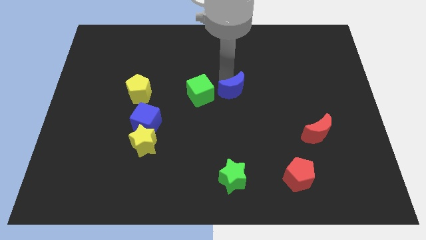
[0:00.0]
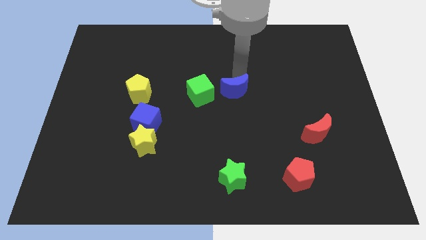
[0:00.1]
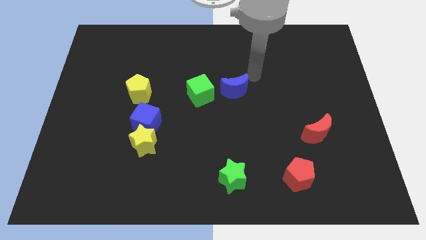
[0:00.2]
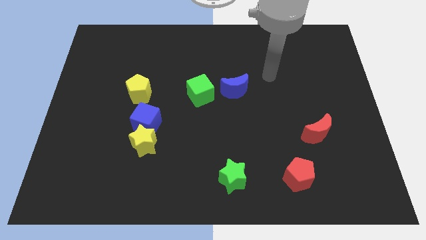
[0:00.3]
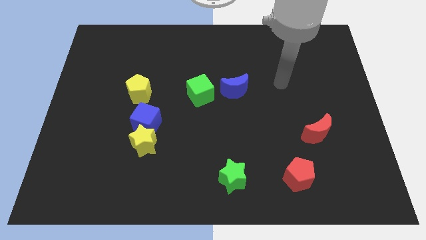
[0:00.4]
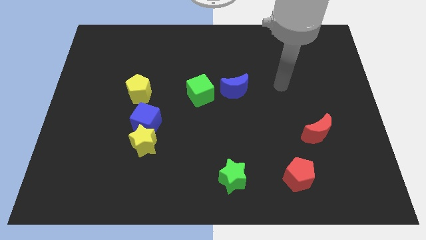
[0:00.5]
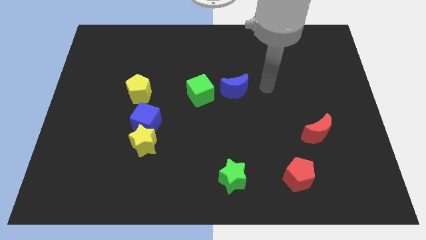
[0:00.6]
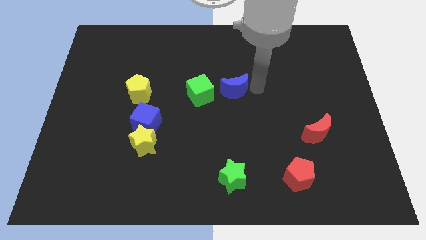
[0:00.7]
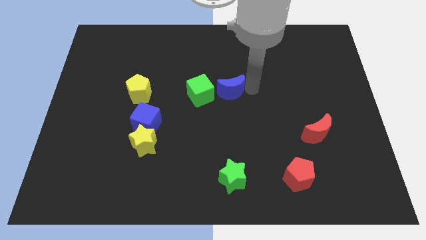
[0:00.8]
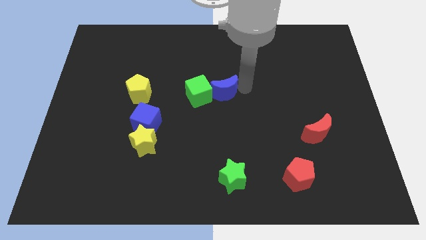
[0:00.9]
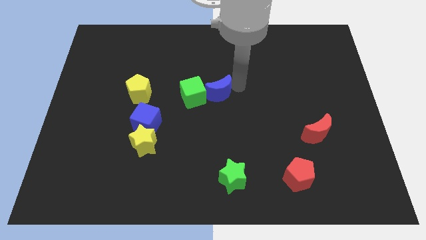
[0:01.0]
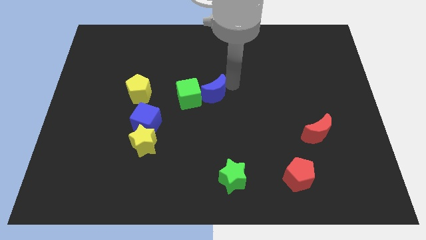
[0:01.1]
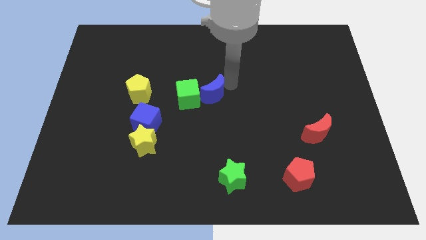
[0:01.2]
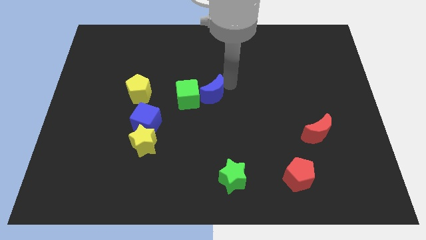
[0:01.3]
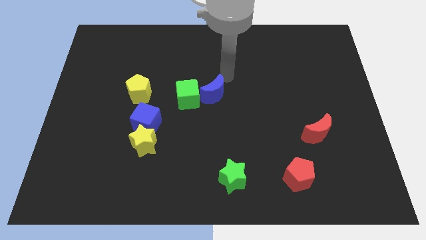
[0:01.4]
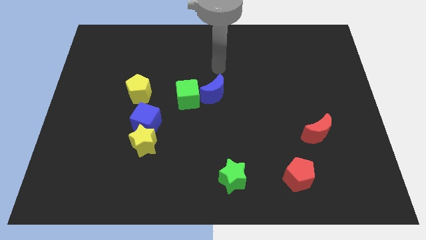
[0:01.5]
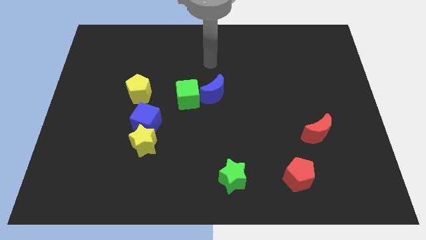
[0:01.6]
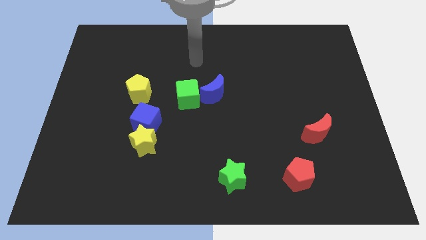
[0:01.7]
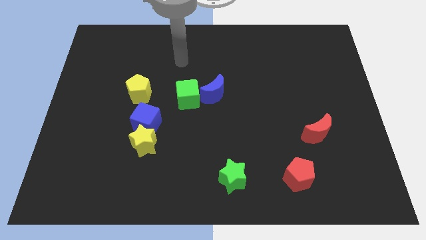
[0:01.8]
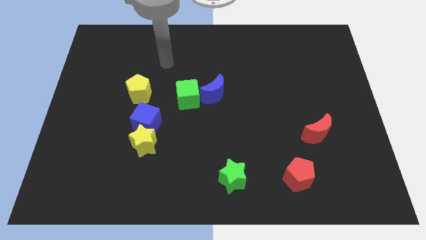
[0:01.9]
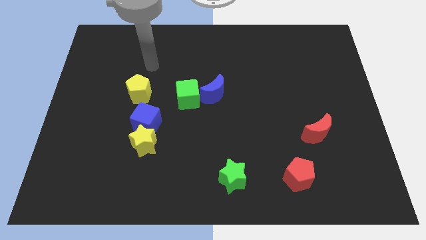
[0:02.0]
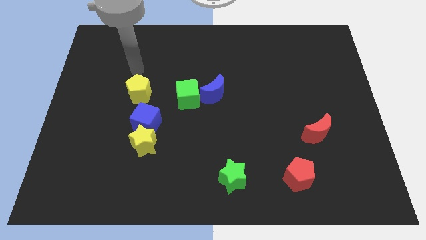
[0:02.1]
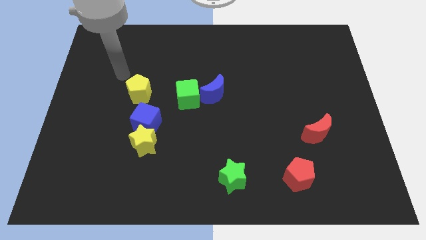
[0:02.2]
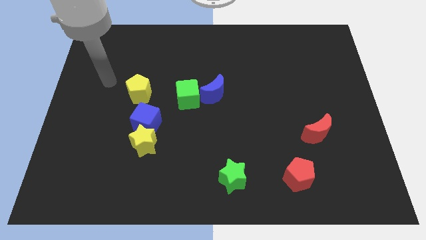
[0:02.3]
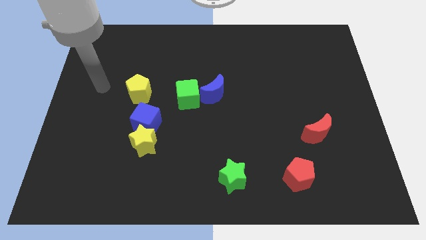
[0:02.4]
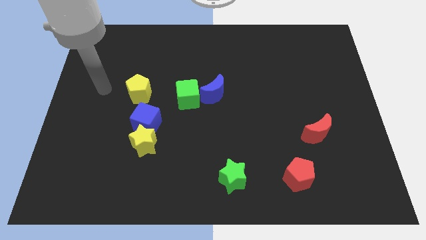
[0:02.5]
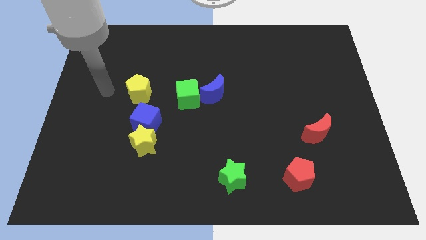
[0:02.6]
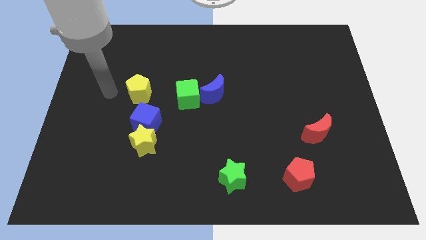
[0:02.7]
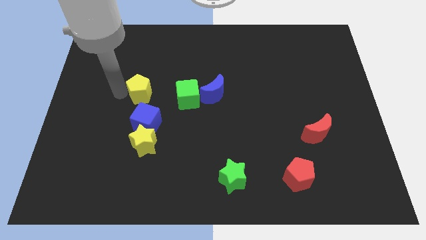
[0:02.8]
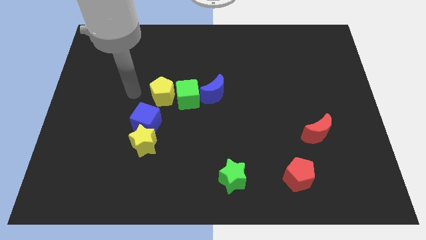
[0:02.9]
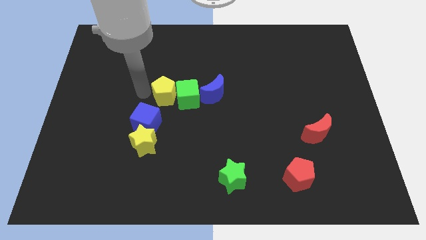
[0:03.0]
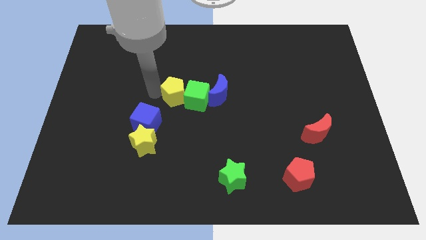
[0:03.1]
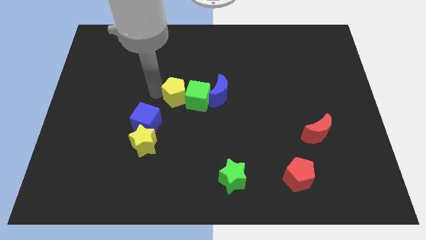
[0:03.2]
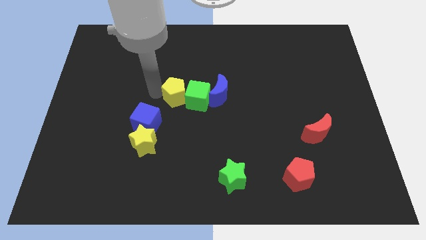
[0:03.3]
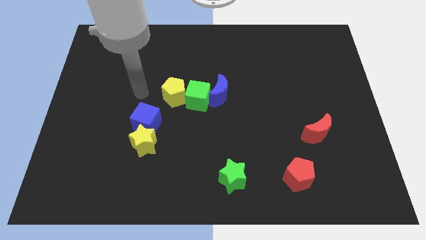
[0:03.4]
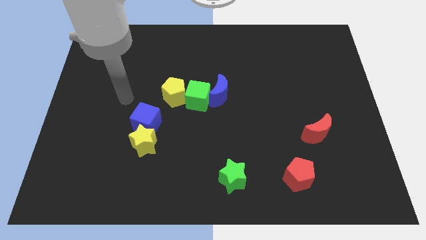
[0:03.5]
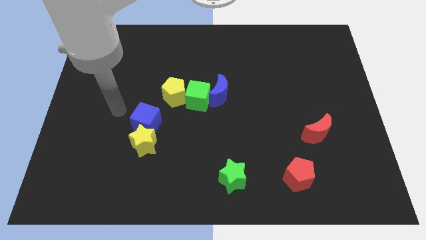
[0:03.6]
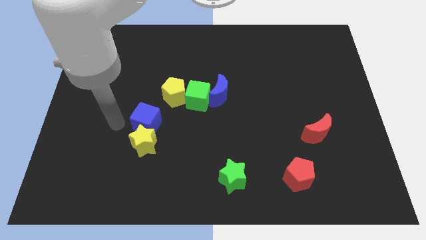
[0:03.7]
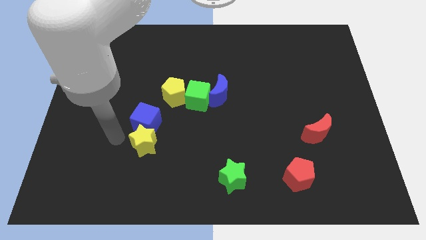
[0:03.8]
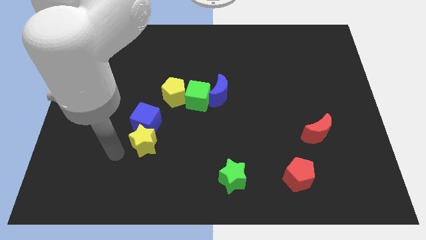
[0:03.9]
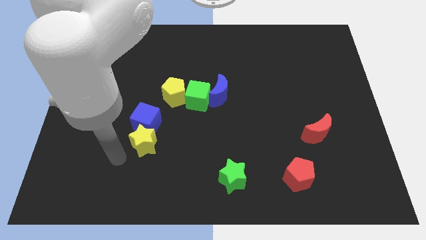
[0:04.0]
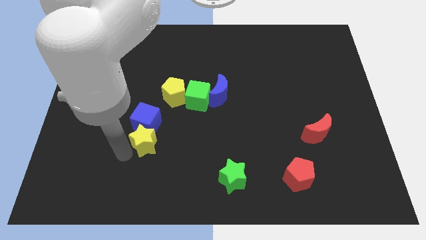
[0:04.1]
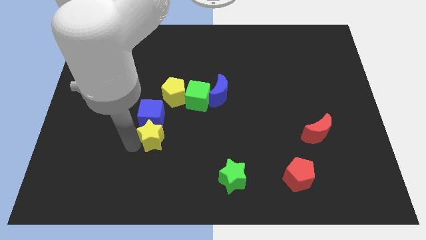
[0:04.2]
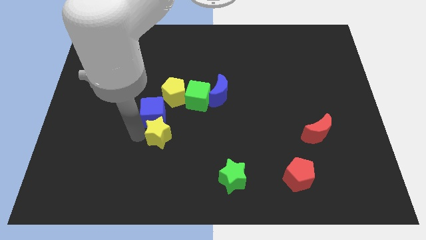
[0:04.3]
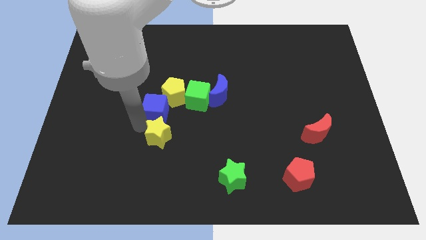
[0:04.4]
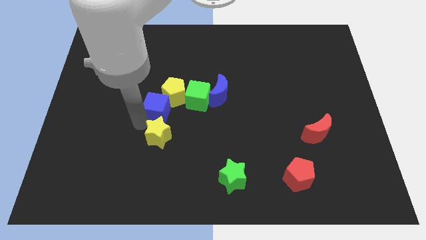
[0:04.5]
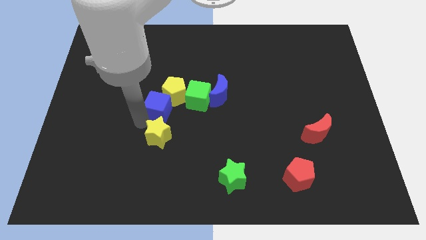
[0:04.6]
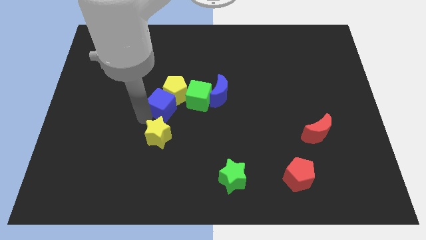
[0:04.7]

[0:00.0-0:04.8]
make a semicircle out of group of blocks

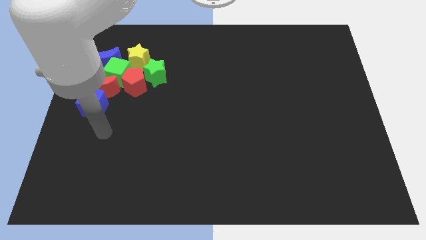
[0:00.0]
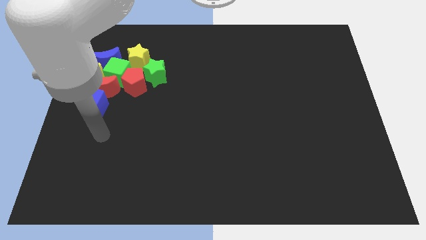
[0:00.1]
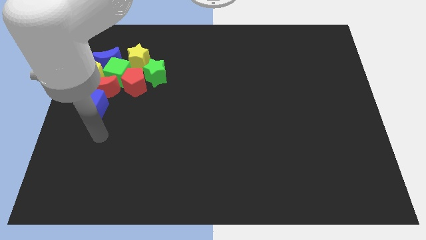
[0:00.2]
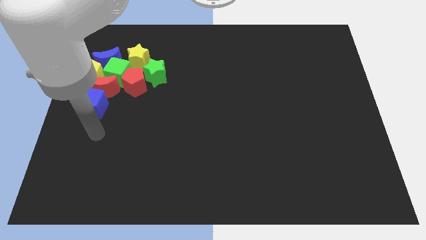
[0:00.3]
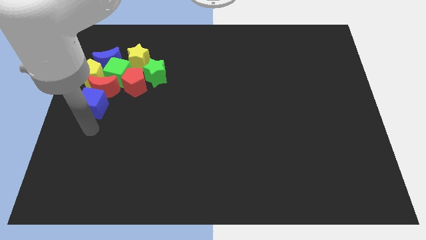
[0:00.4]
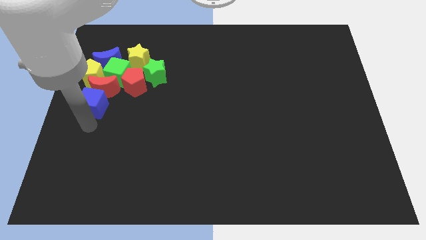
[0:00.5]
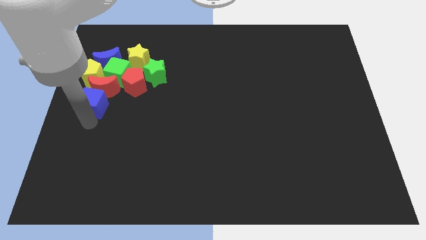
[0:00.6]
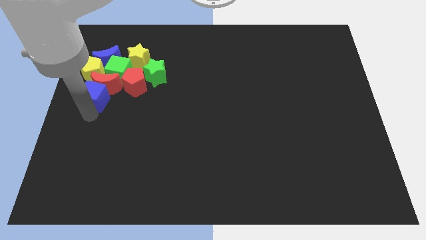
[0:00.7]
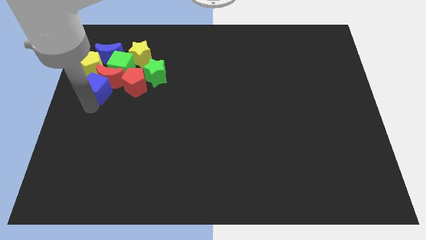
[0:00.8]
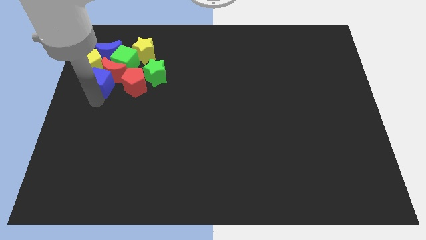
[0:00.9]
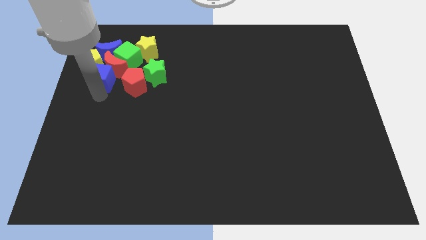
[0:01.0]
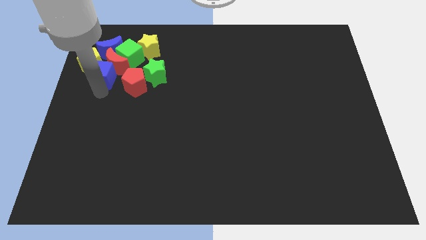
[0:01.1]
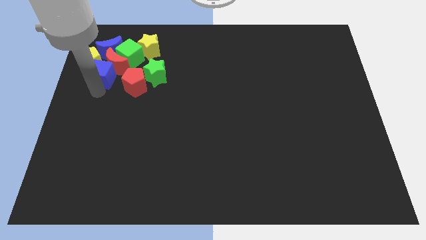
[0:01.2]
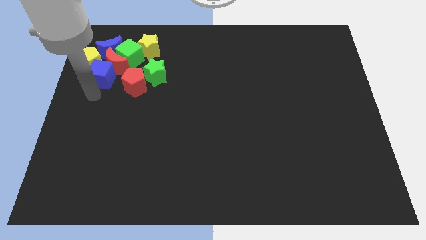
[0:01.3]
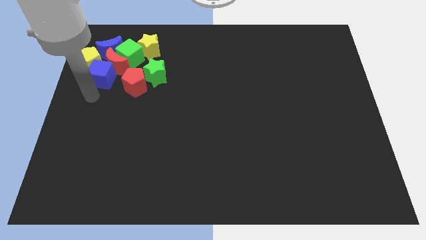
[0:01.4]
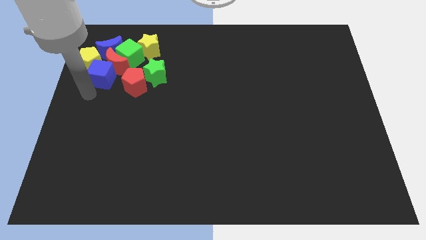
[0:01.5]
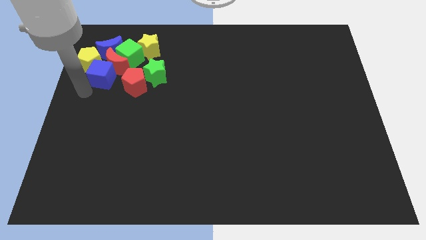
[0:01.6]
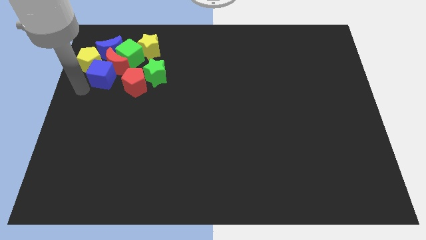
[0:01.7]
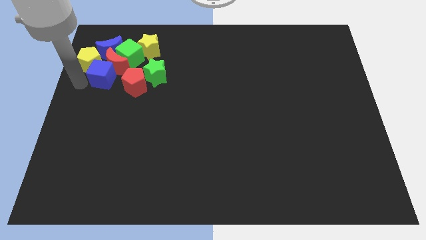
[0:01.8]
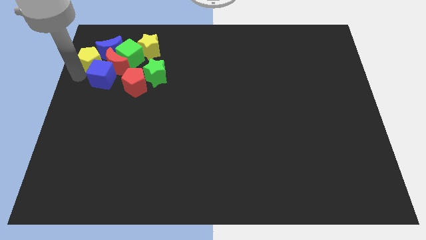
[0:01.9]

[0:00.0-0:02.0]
push the blue cube into red moon and yellow pentagon

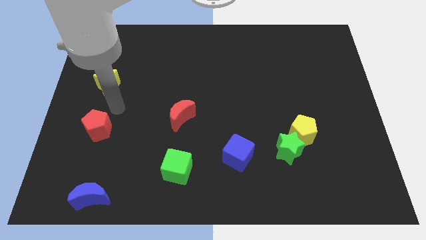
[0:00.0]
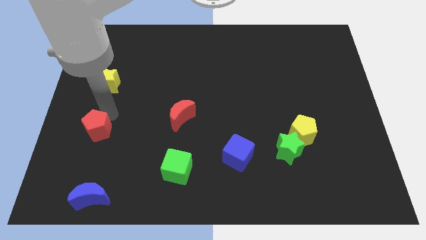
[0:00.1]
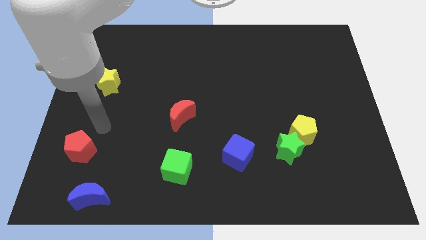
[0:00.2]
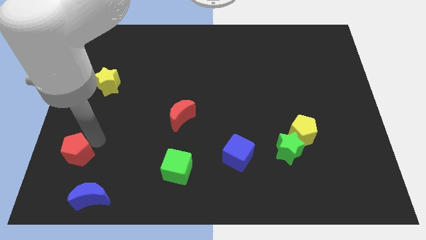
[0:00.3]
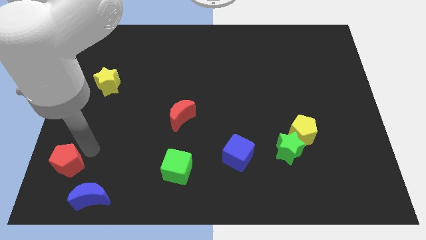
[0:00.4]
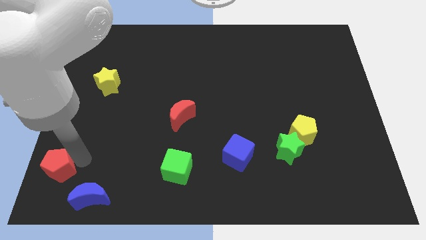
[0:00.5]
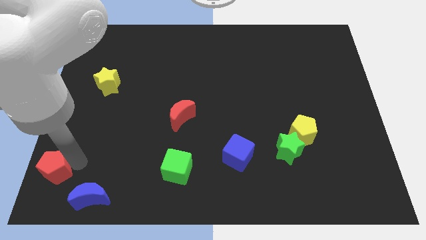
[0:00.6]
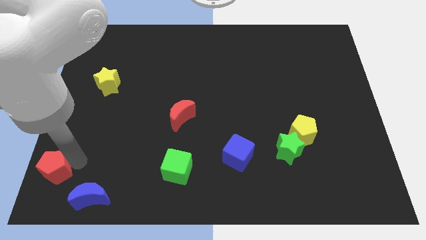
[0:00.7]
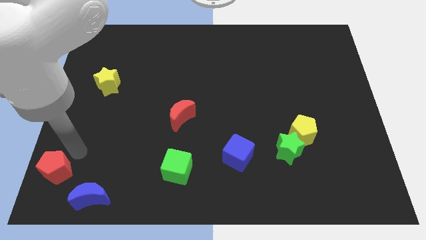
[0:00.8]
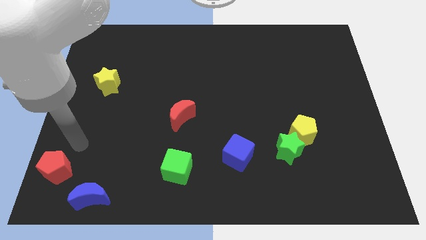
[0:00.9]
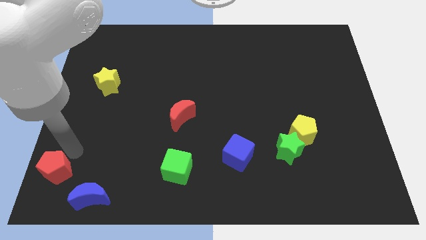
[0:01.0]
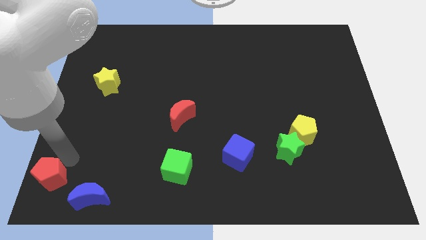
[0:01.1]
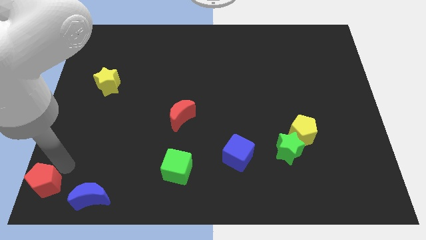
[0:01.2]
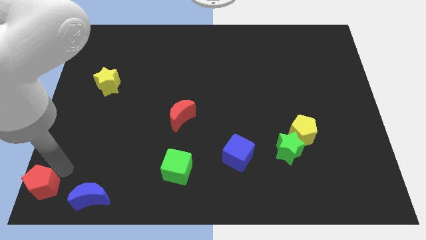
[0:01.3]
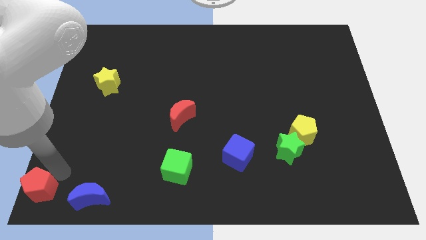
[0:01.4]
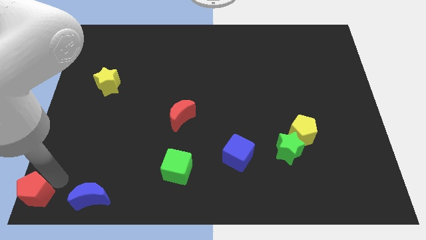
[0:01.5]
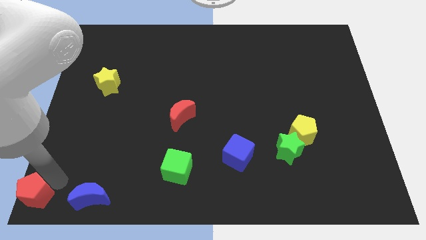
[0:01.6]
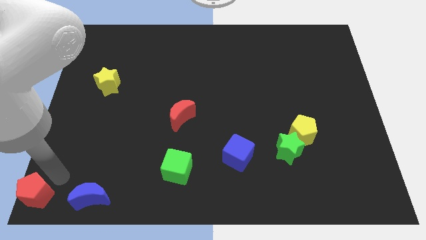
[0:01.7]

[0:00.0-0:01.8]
place the red pentagon left to the blue moon

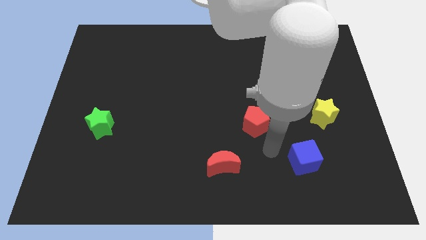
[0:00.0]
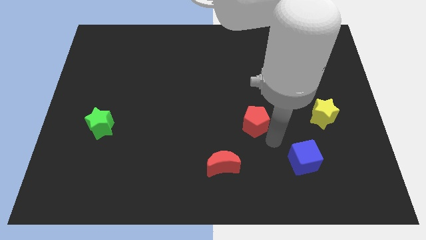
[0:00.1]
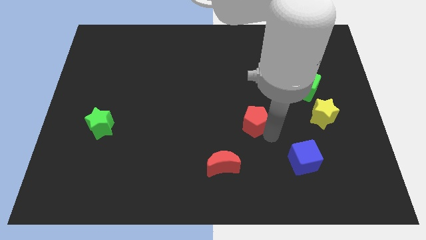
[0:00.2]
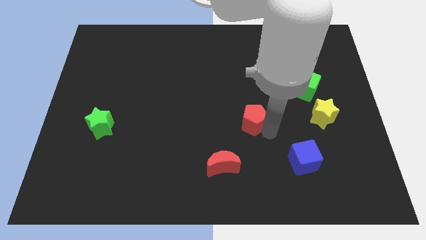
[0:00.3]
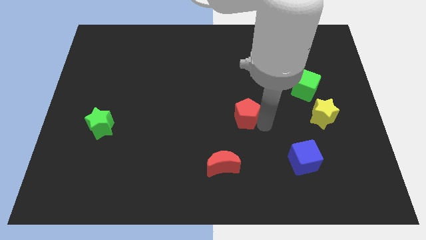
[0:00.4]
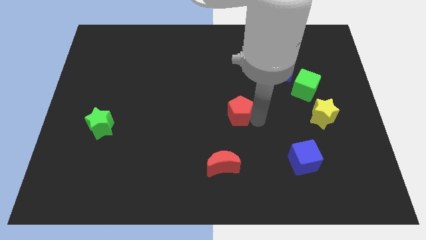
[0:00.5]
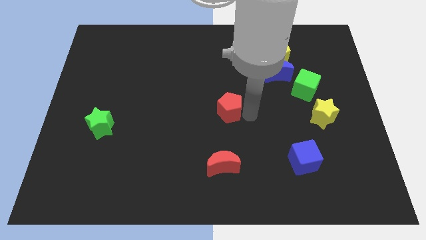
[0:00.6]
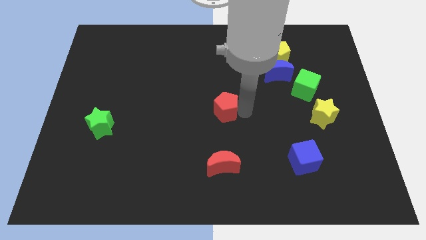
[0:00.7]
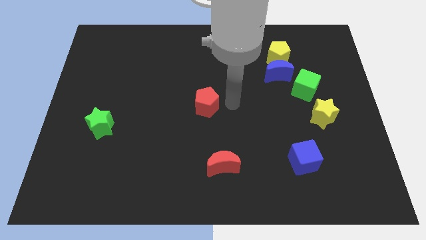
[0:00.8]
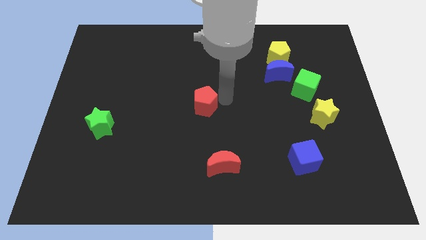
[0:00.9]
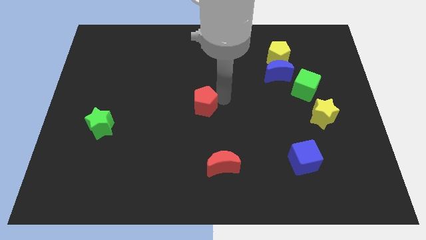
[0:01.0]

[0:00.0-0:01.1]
place the red pentagon at the center of the board
